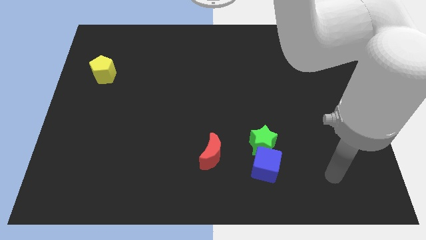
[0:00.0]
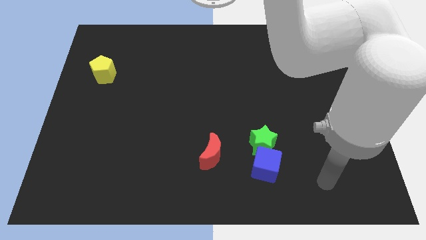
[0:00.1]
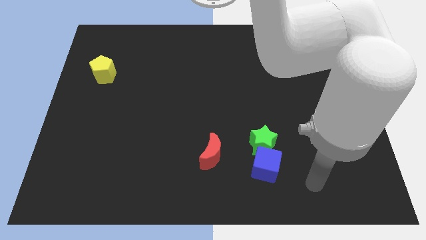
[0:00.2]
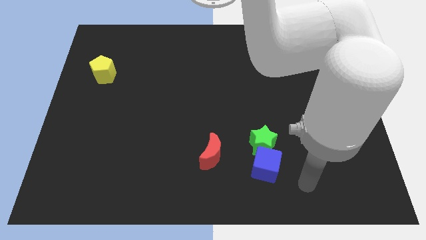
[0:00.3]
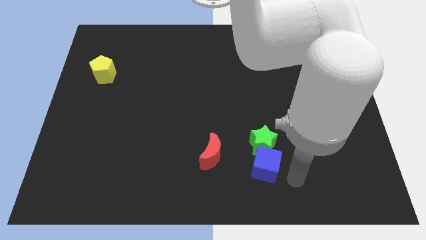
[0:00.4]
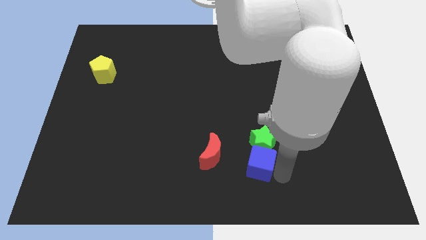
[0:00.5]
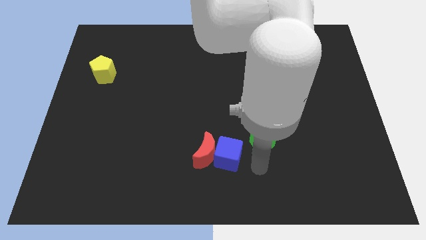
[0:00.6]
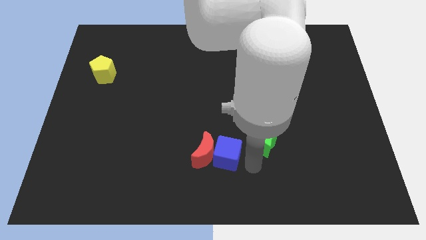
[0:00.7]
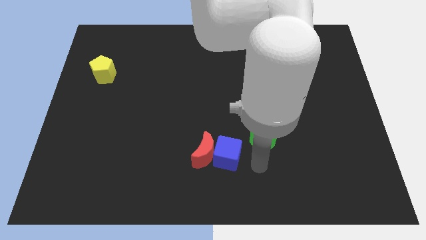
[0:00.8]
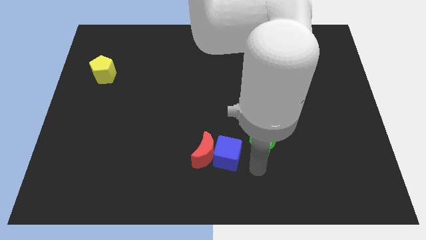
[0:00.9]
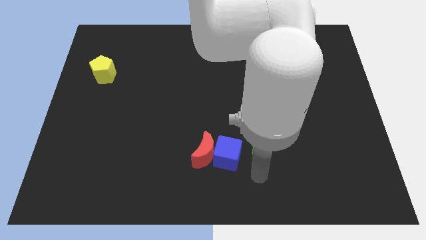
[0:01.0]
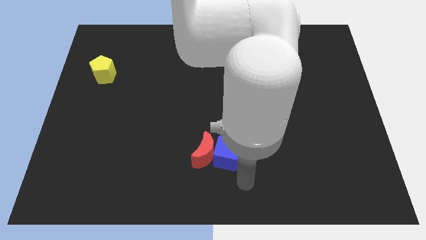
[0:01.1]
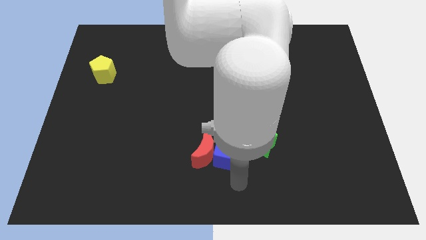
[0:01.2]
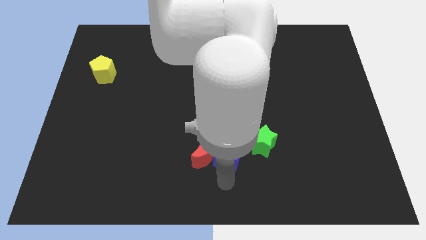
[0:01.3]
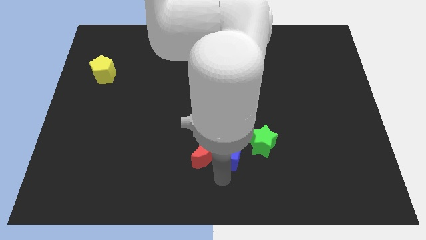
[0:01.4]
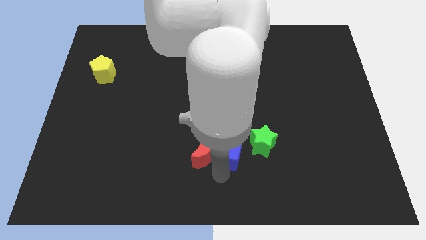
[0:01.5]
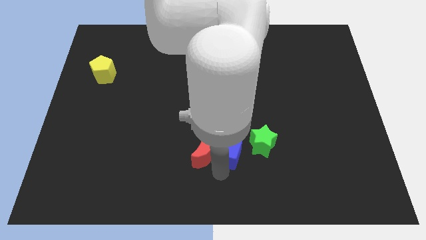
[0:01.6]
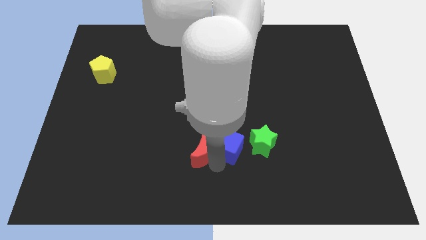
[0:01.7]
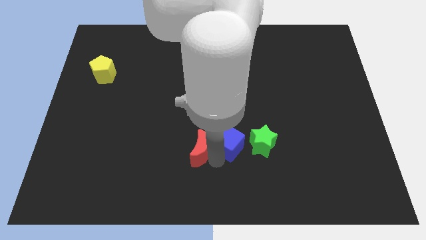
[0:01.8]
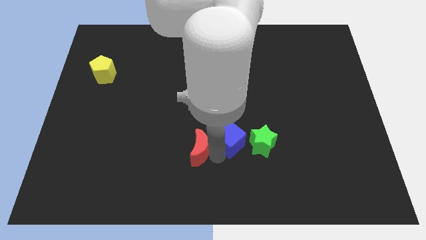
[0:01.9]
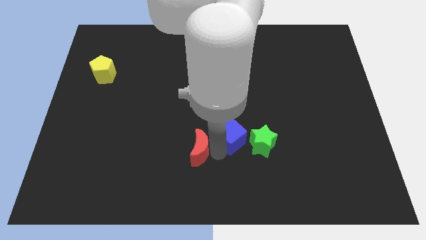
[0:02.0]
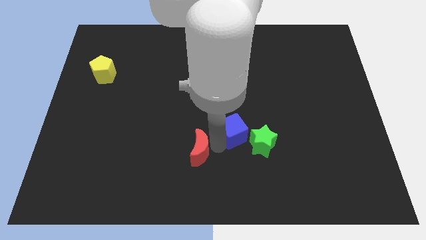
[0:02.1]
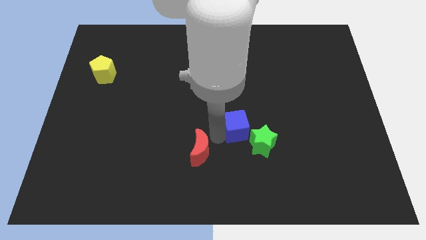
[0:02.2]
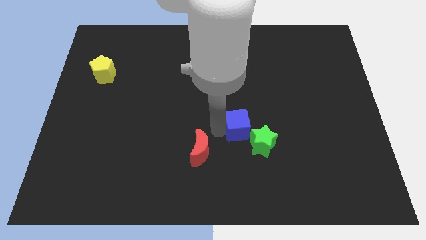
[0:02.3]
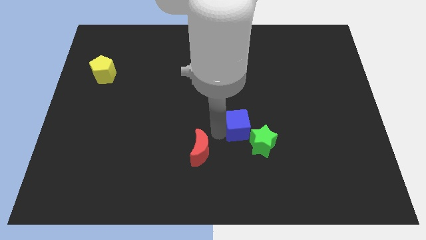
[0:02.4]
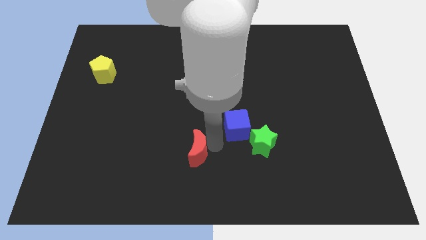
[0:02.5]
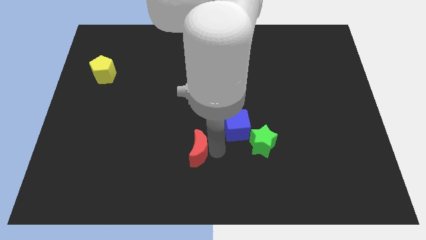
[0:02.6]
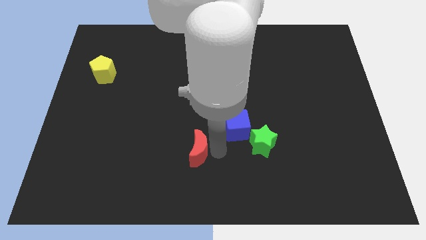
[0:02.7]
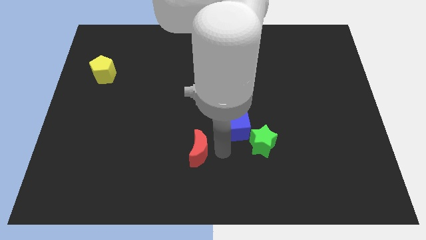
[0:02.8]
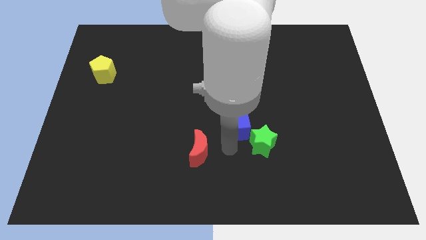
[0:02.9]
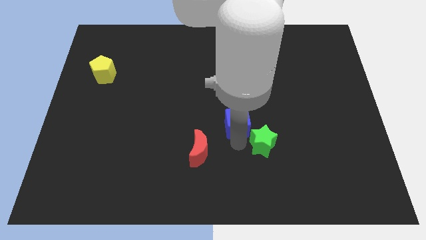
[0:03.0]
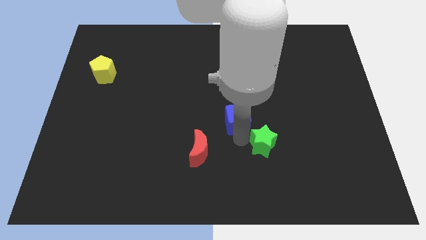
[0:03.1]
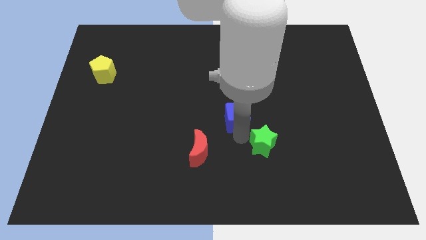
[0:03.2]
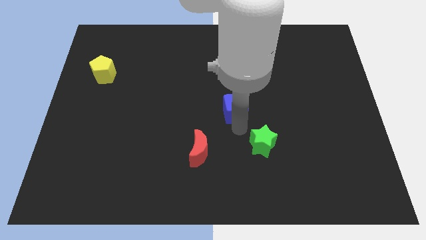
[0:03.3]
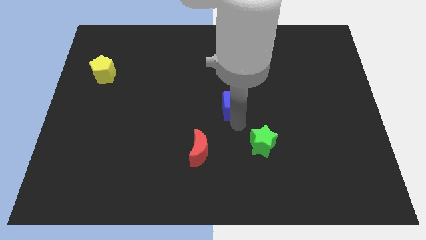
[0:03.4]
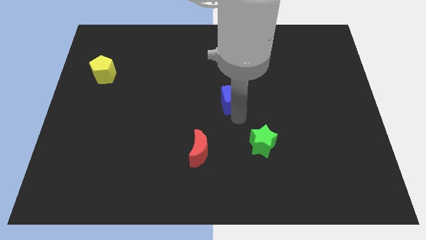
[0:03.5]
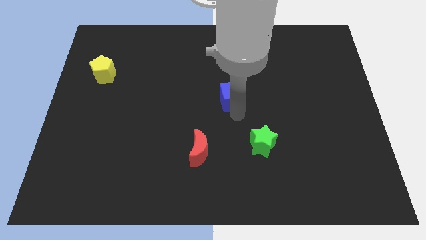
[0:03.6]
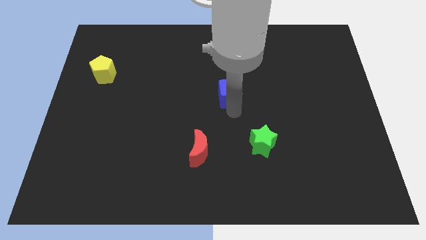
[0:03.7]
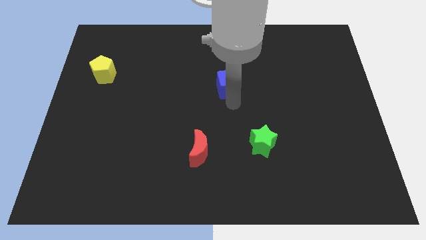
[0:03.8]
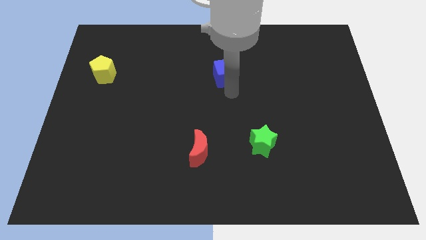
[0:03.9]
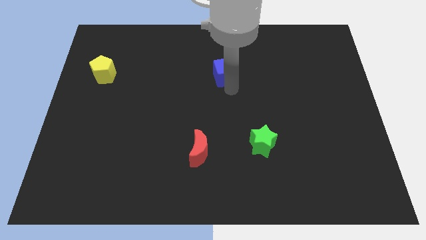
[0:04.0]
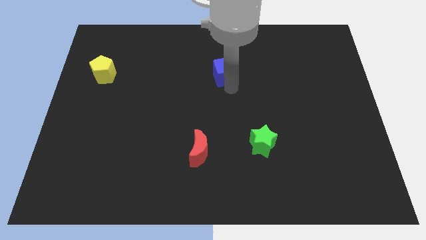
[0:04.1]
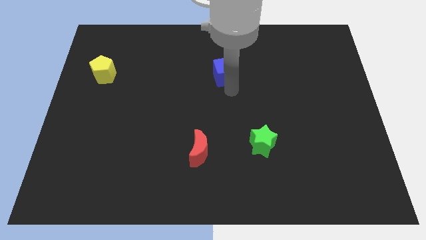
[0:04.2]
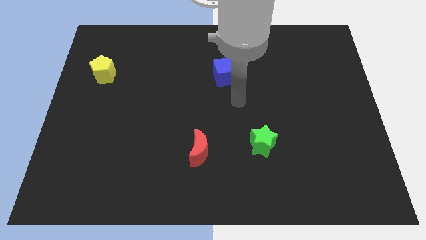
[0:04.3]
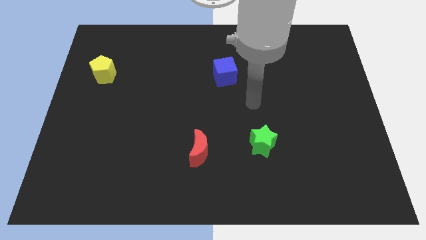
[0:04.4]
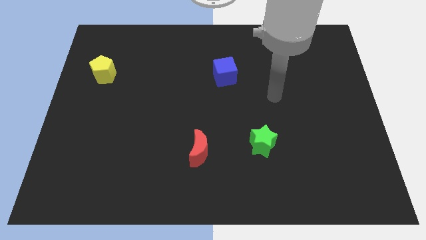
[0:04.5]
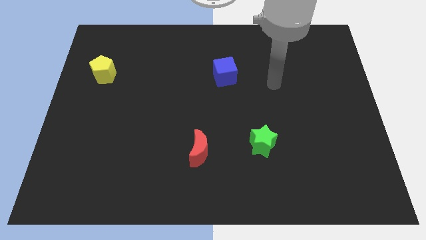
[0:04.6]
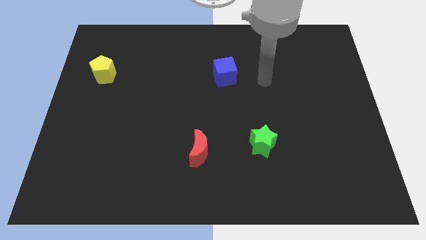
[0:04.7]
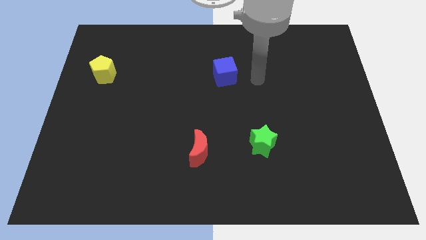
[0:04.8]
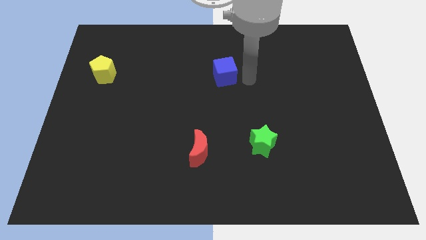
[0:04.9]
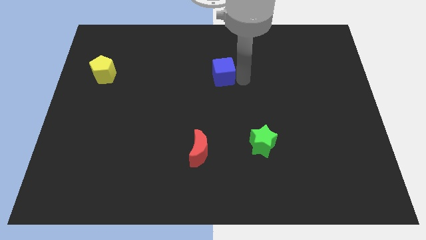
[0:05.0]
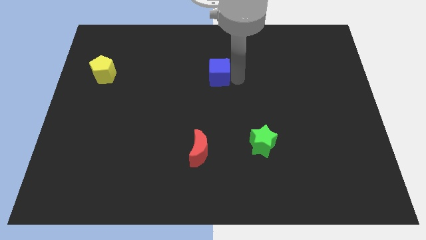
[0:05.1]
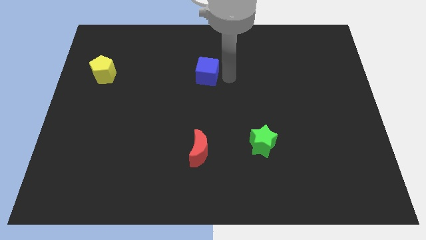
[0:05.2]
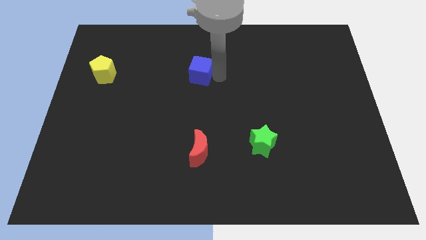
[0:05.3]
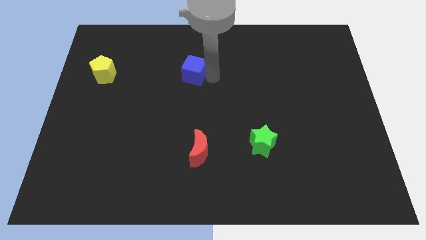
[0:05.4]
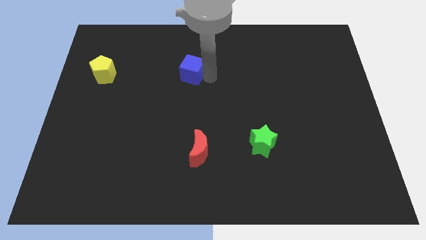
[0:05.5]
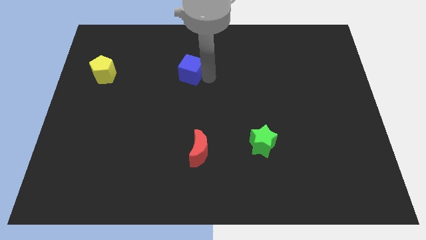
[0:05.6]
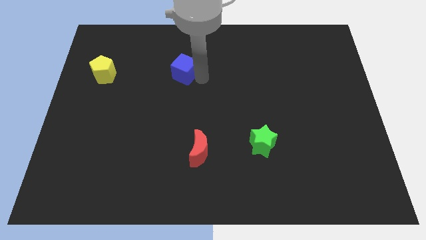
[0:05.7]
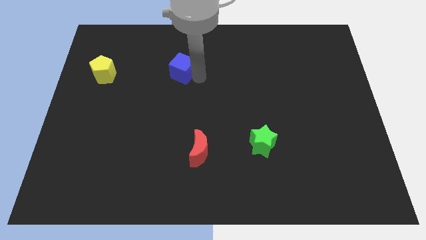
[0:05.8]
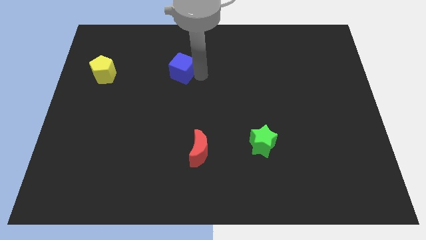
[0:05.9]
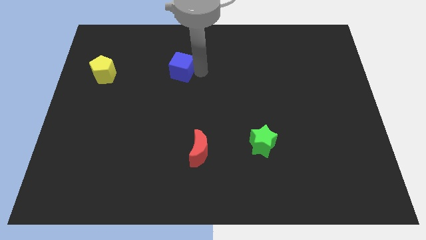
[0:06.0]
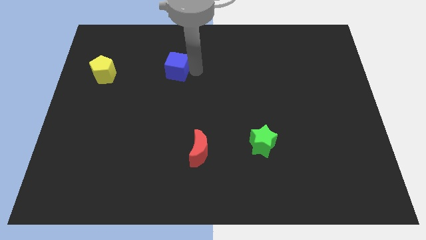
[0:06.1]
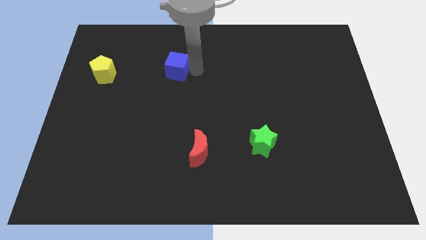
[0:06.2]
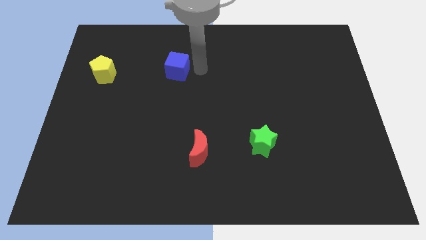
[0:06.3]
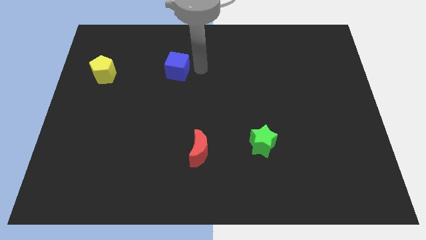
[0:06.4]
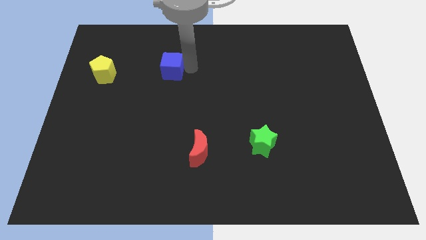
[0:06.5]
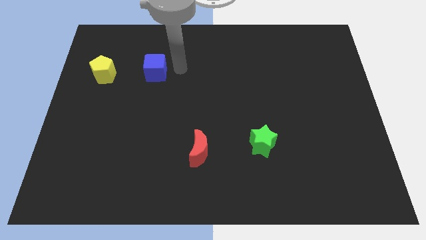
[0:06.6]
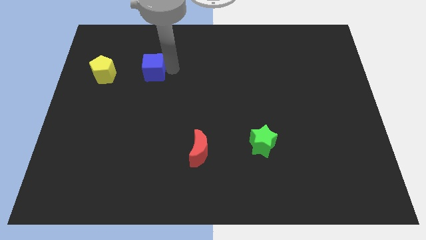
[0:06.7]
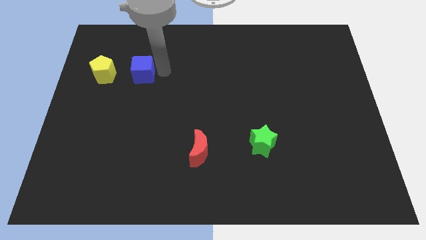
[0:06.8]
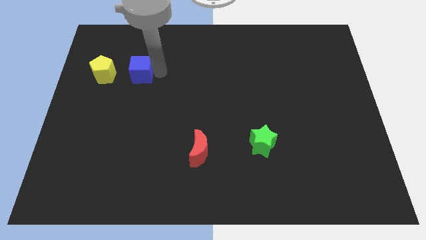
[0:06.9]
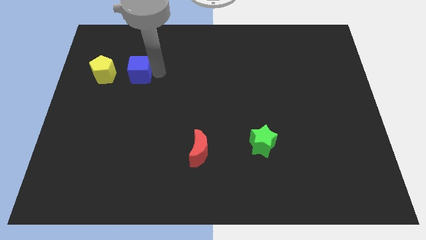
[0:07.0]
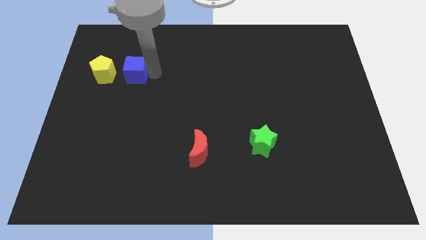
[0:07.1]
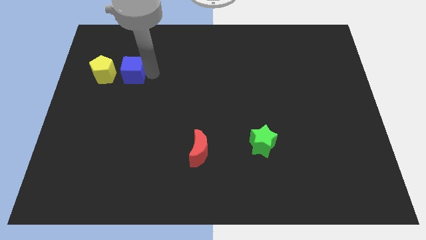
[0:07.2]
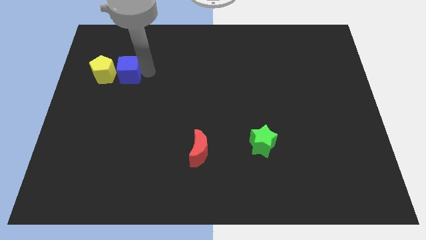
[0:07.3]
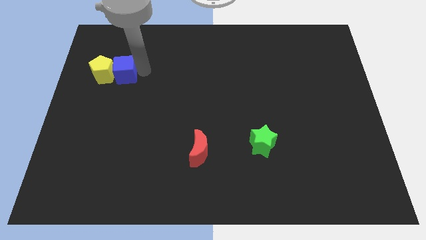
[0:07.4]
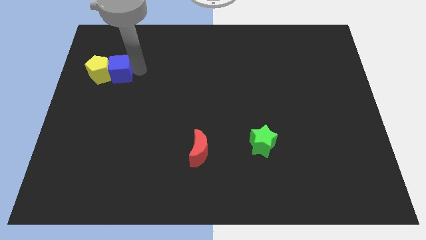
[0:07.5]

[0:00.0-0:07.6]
put the blue block close to the yellow pentagon

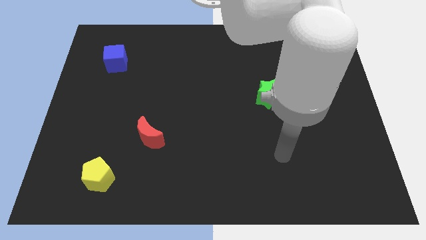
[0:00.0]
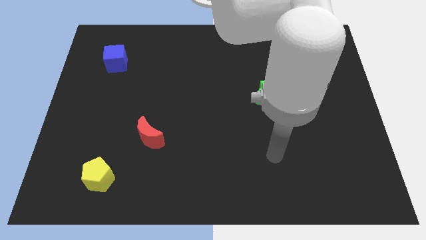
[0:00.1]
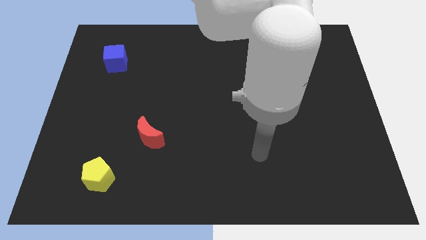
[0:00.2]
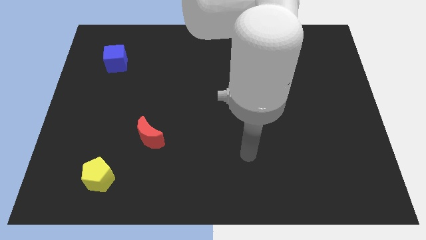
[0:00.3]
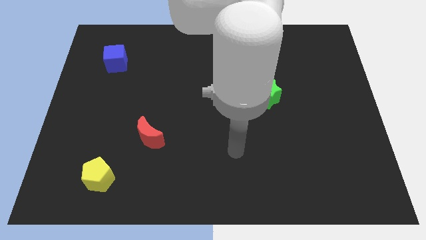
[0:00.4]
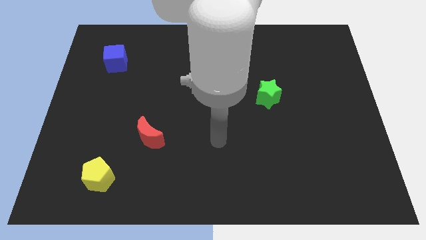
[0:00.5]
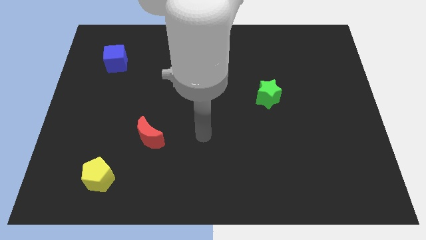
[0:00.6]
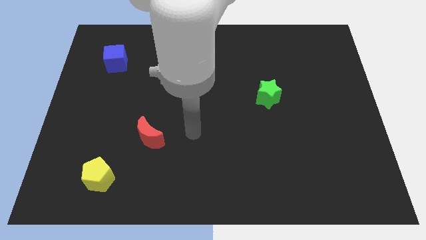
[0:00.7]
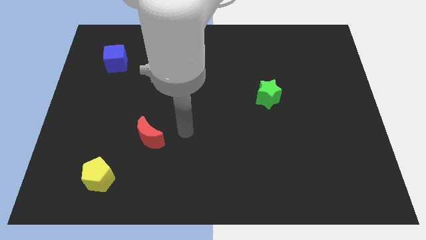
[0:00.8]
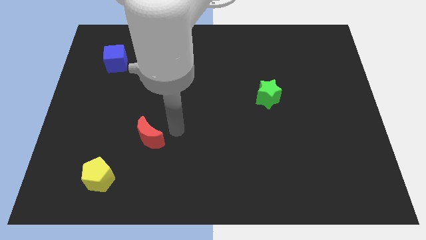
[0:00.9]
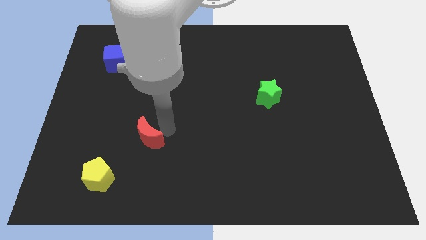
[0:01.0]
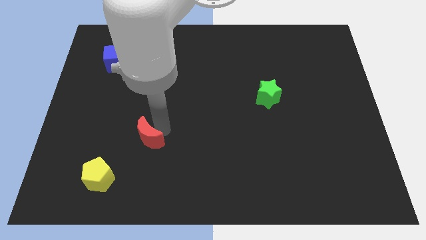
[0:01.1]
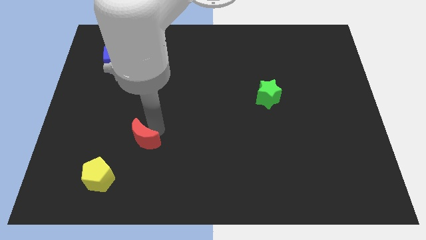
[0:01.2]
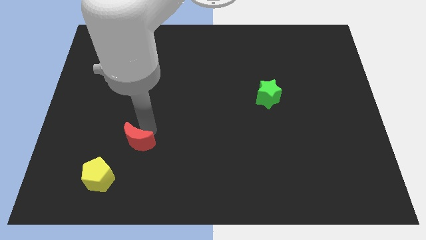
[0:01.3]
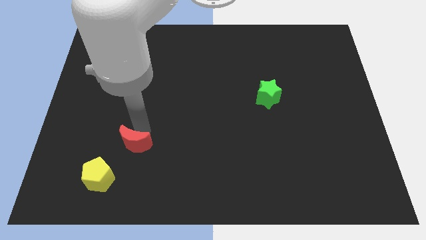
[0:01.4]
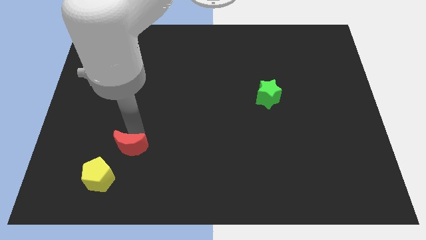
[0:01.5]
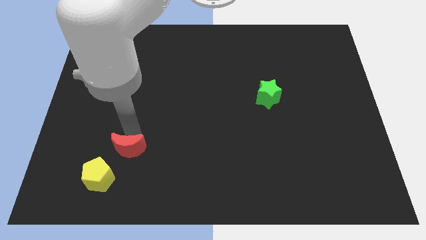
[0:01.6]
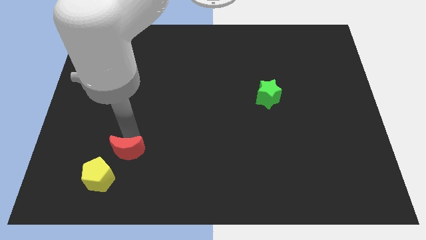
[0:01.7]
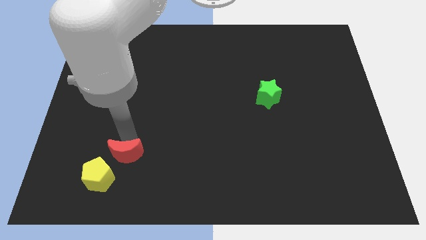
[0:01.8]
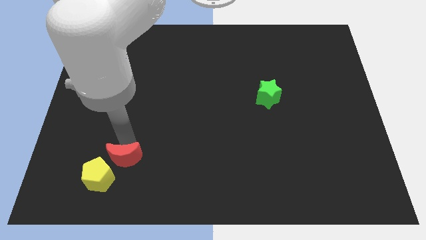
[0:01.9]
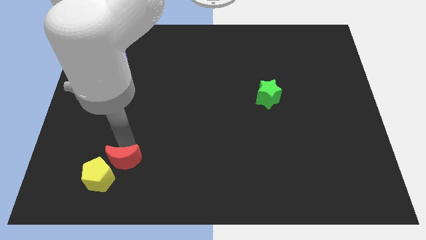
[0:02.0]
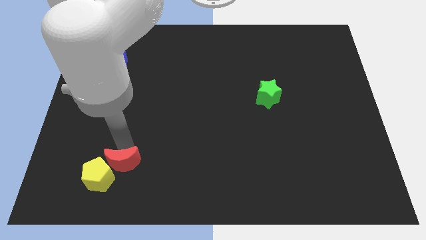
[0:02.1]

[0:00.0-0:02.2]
push the red moon towards the yellow block
